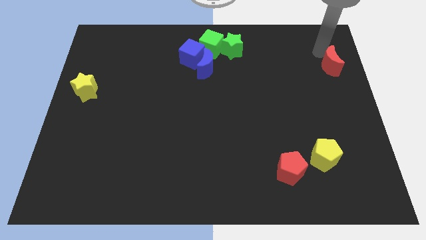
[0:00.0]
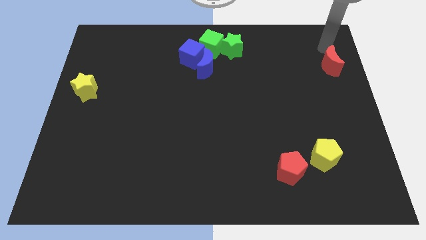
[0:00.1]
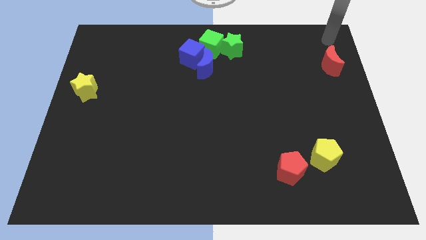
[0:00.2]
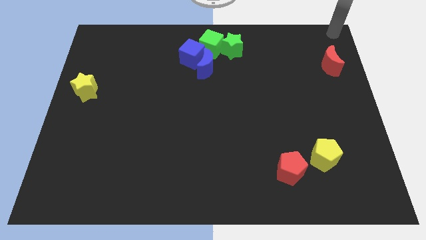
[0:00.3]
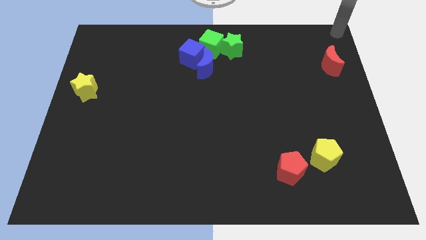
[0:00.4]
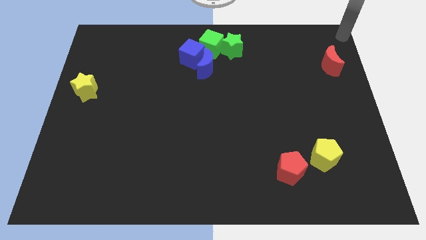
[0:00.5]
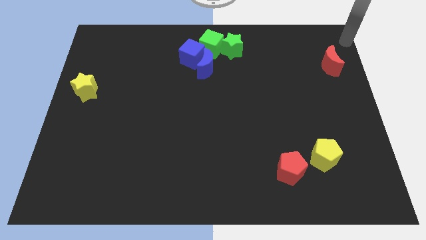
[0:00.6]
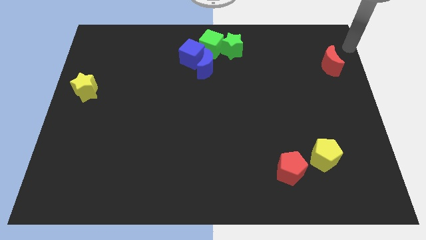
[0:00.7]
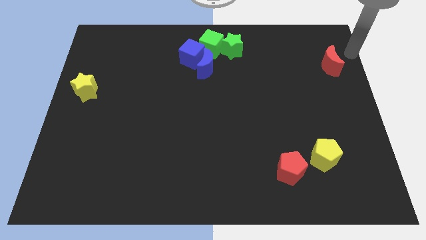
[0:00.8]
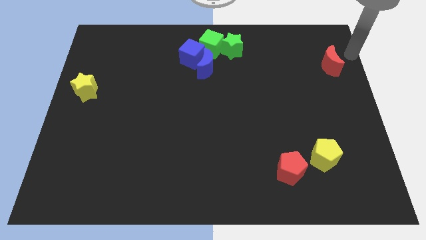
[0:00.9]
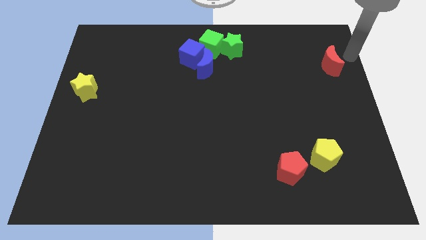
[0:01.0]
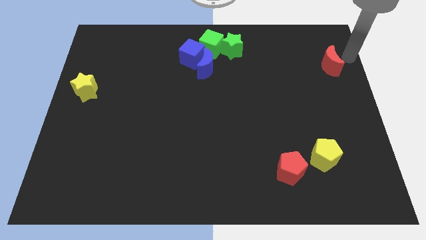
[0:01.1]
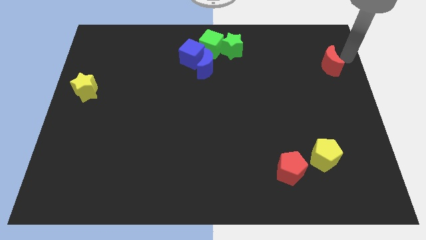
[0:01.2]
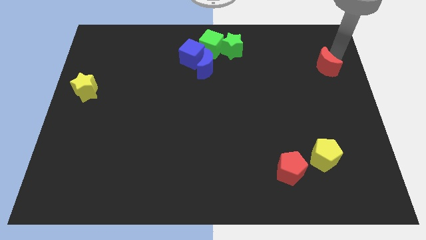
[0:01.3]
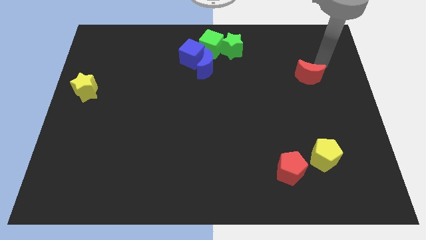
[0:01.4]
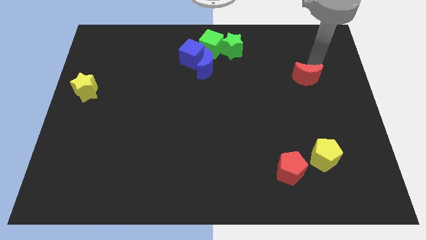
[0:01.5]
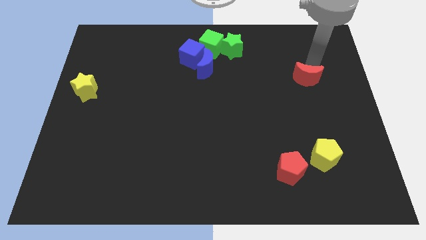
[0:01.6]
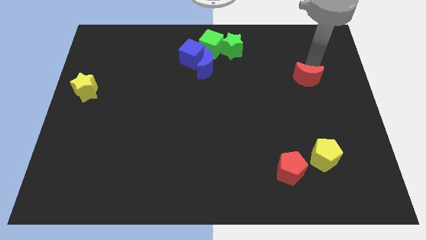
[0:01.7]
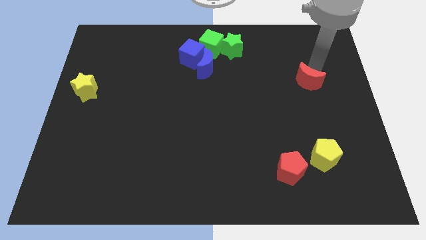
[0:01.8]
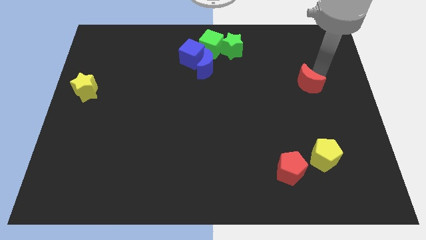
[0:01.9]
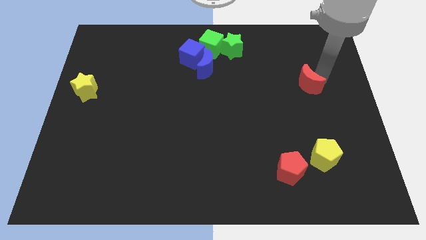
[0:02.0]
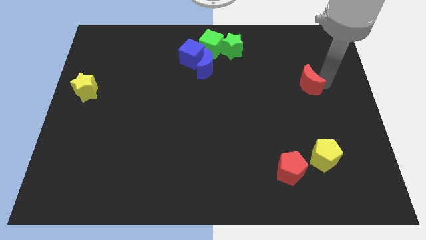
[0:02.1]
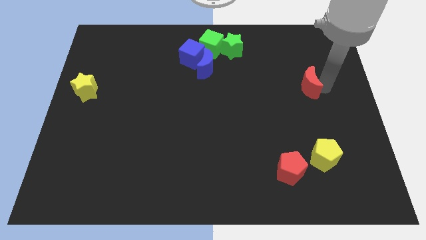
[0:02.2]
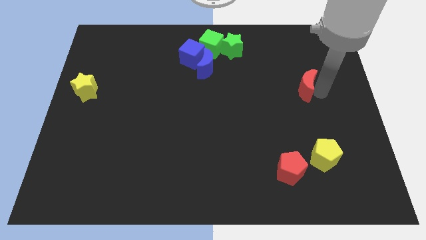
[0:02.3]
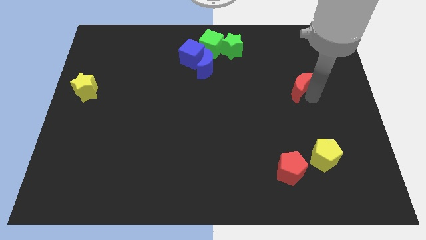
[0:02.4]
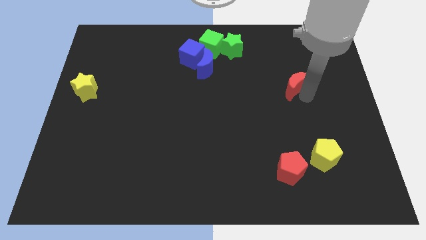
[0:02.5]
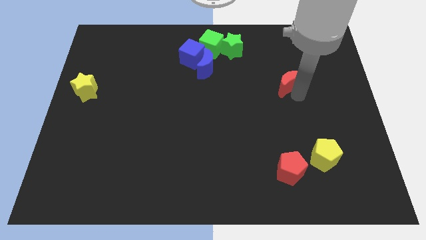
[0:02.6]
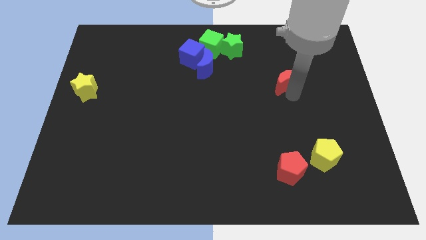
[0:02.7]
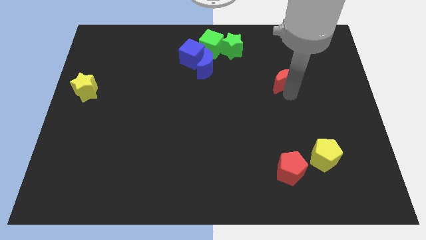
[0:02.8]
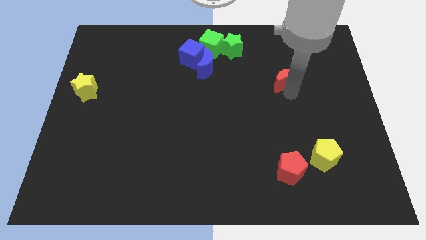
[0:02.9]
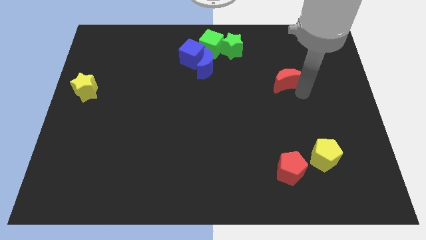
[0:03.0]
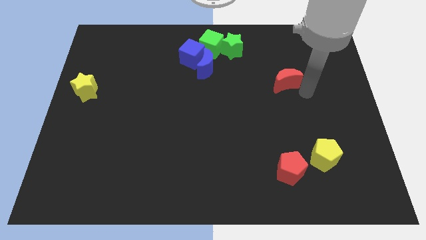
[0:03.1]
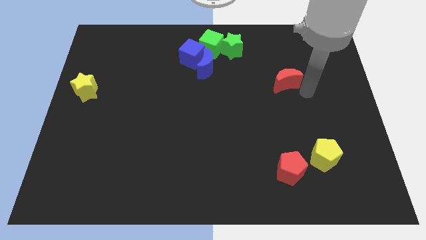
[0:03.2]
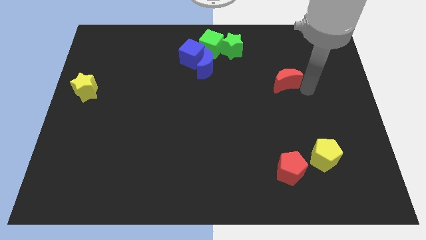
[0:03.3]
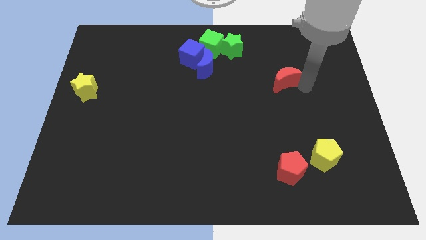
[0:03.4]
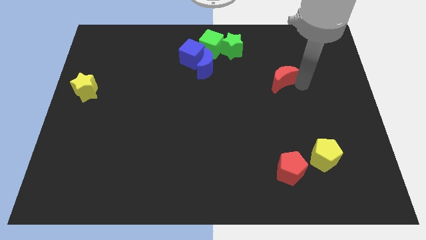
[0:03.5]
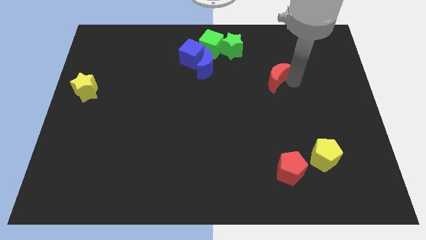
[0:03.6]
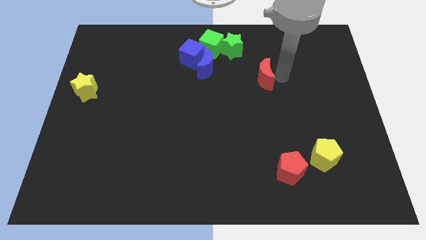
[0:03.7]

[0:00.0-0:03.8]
move red crescent towards blue cubes

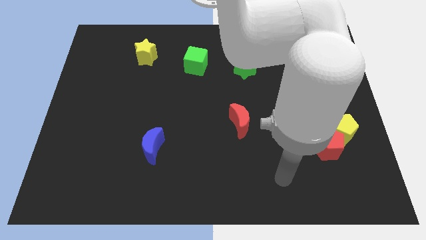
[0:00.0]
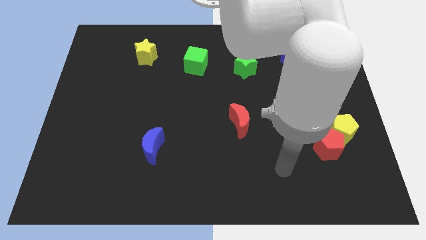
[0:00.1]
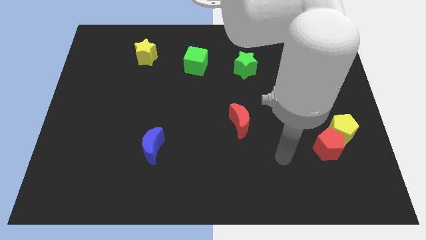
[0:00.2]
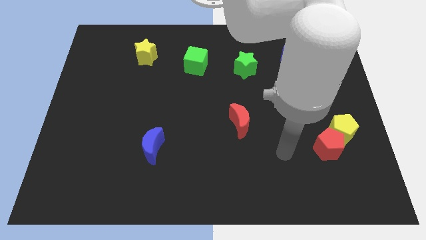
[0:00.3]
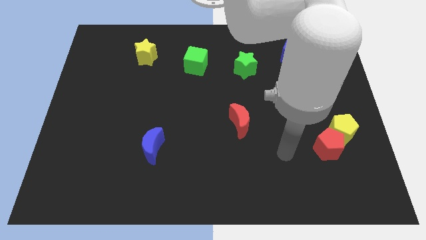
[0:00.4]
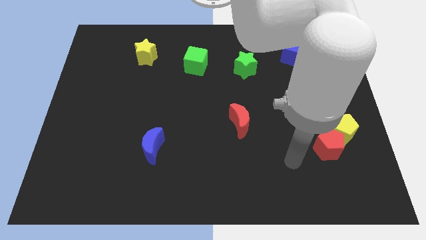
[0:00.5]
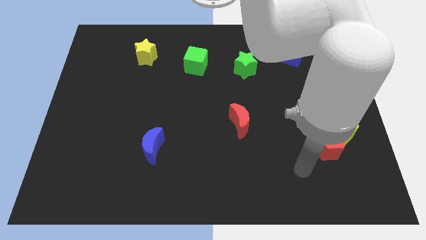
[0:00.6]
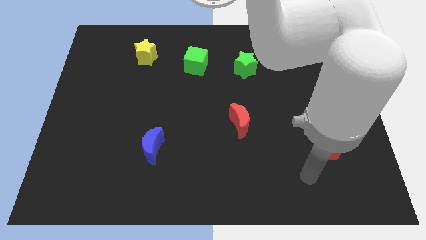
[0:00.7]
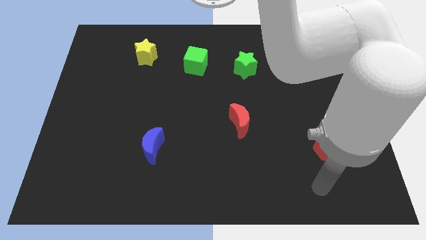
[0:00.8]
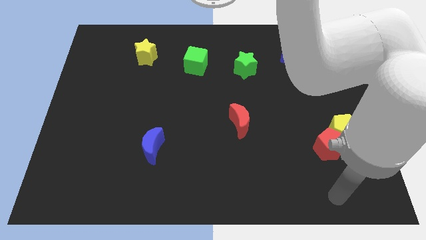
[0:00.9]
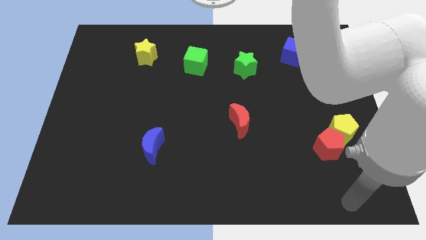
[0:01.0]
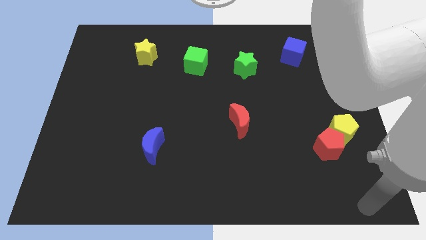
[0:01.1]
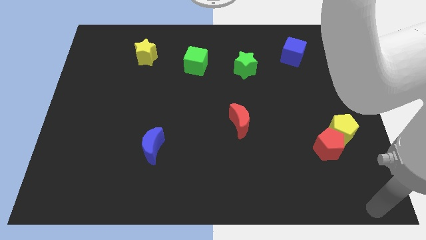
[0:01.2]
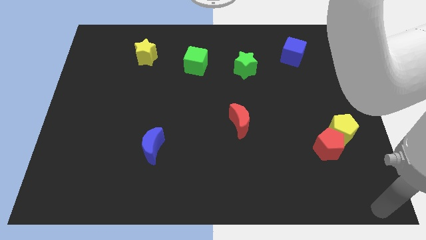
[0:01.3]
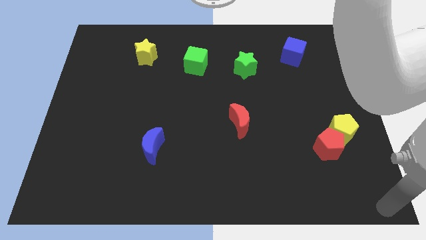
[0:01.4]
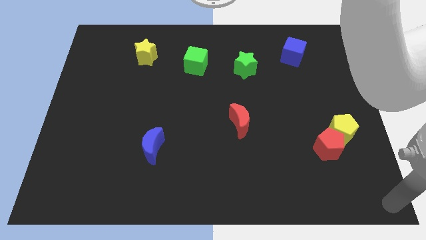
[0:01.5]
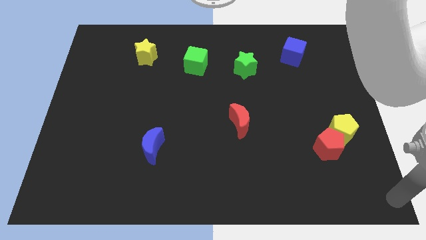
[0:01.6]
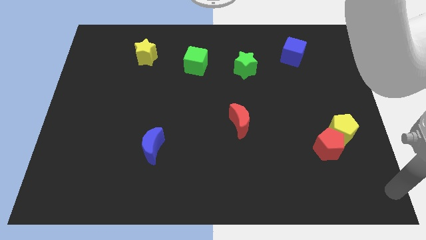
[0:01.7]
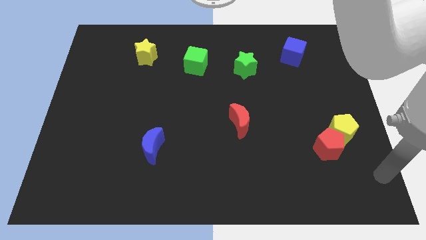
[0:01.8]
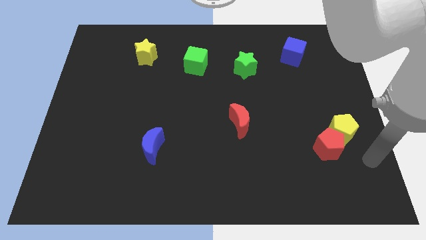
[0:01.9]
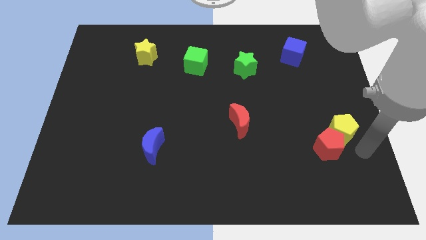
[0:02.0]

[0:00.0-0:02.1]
point your arm at the right side of the red pentagon

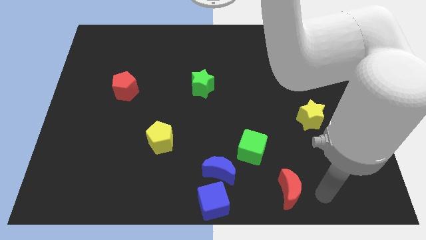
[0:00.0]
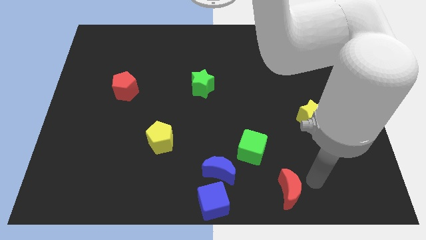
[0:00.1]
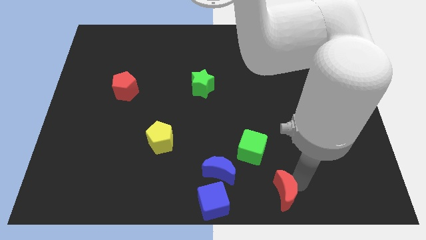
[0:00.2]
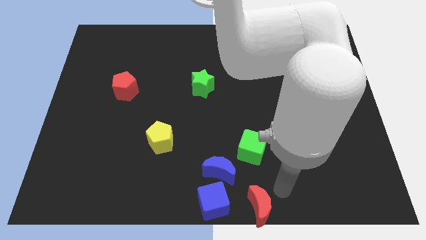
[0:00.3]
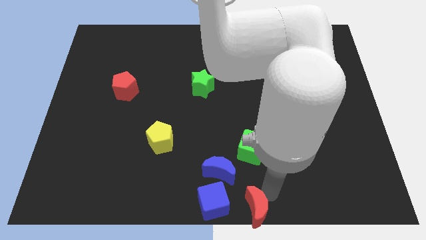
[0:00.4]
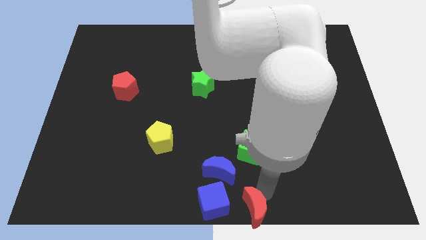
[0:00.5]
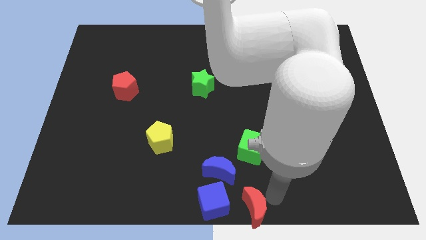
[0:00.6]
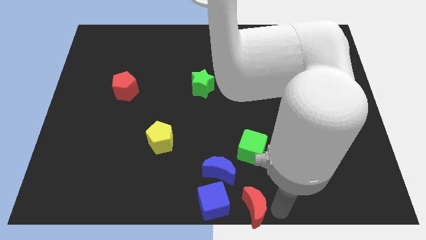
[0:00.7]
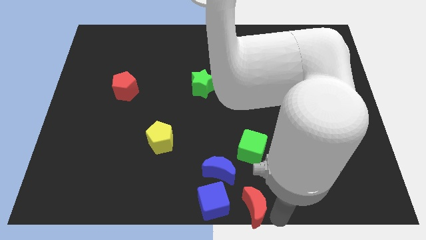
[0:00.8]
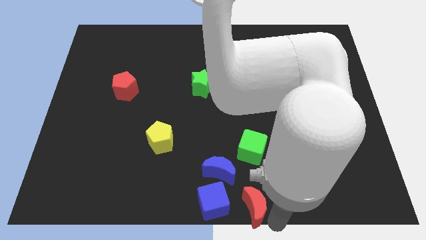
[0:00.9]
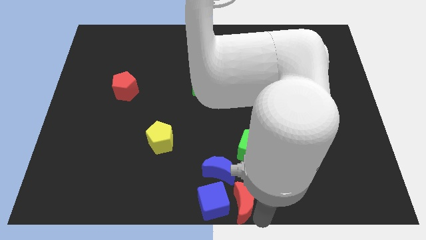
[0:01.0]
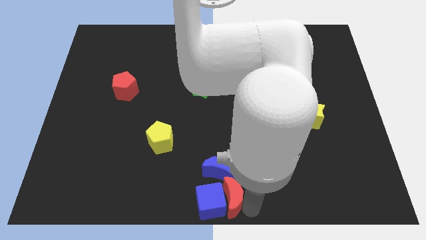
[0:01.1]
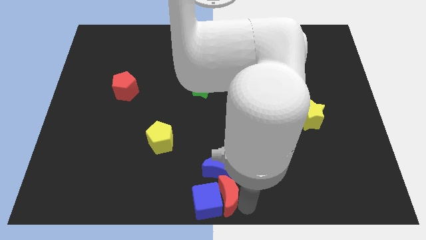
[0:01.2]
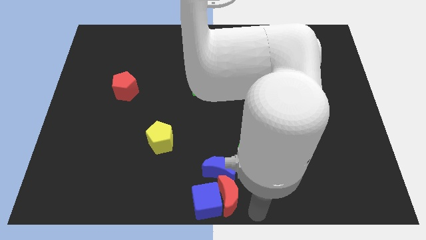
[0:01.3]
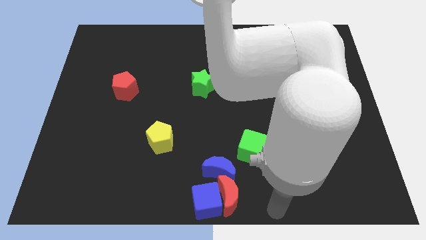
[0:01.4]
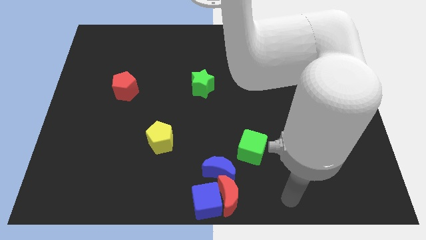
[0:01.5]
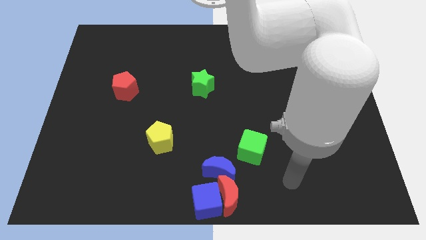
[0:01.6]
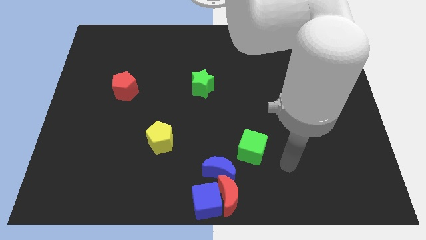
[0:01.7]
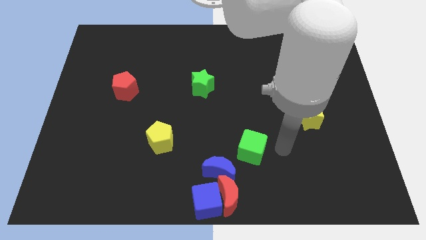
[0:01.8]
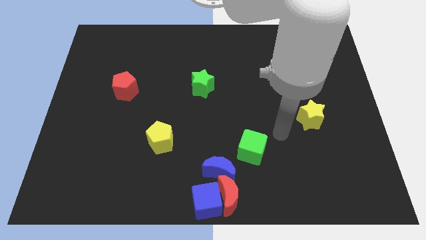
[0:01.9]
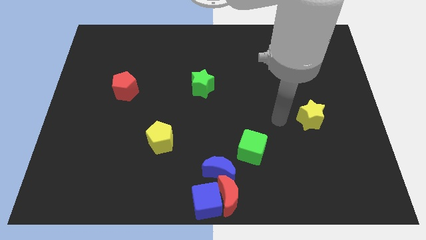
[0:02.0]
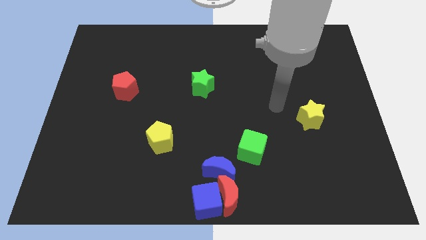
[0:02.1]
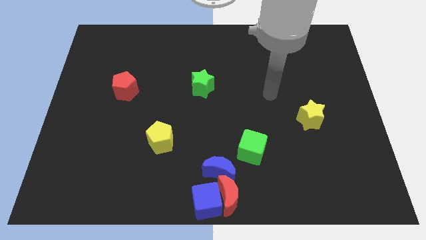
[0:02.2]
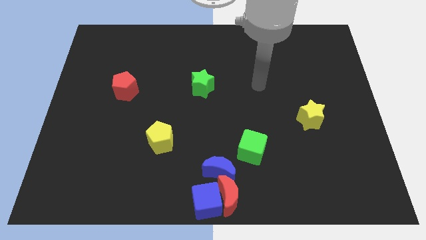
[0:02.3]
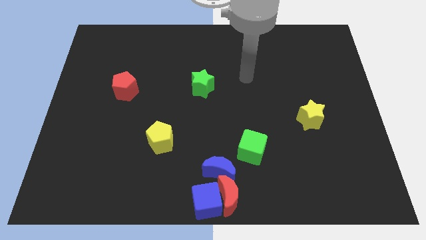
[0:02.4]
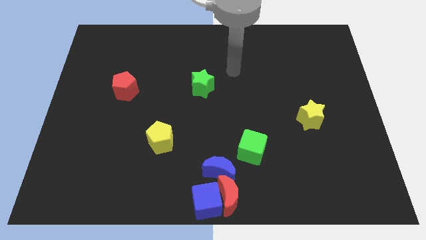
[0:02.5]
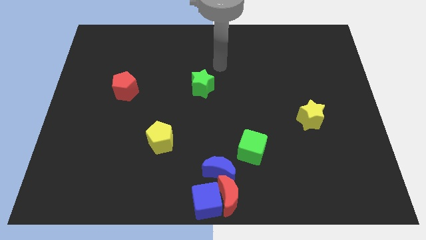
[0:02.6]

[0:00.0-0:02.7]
push the red crescent right to the blue cube

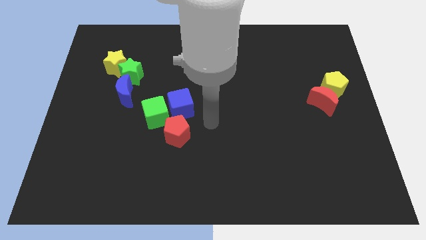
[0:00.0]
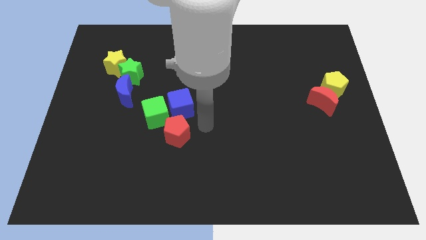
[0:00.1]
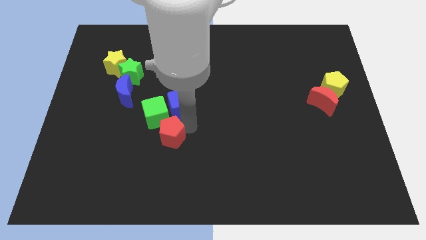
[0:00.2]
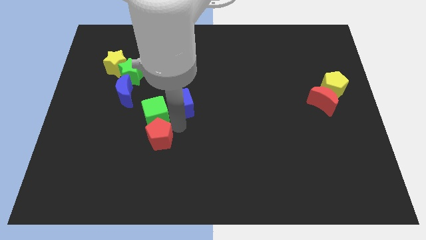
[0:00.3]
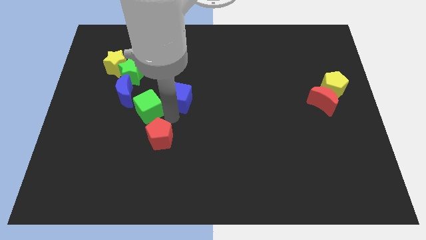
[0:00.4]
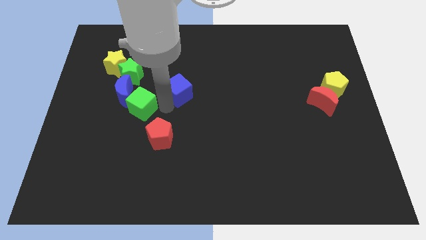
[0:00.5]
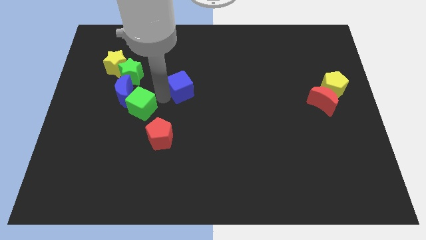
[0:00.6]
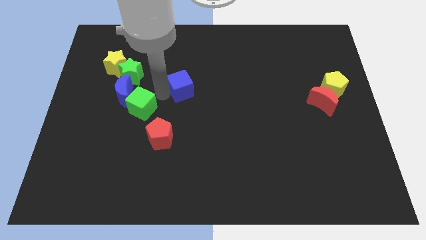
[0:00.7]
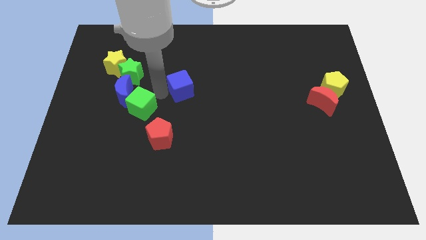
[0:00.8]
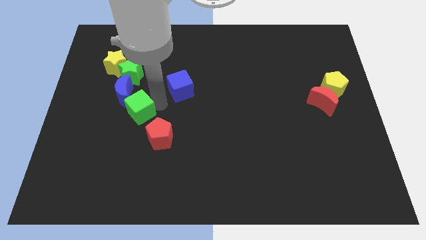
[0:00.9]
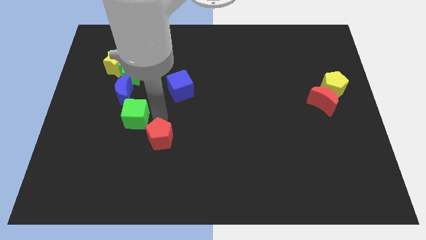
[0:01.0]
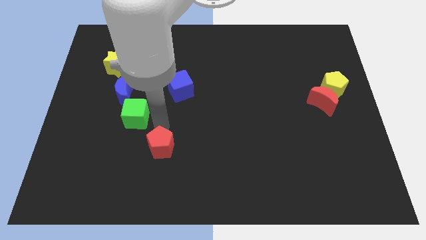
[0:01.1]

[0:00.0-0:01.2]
separate the blue cube from the red pentagon
